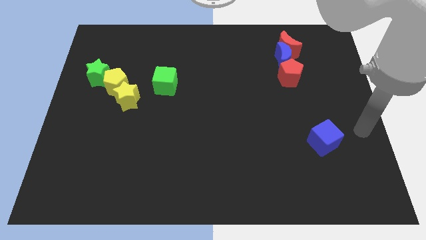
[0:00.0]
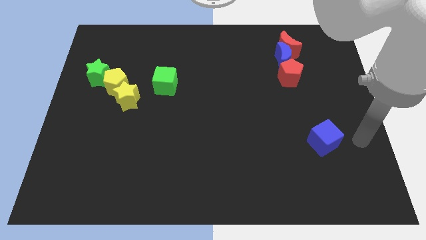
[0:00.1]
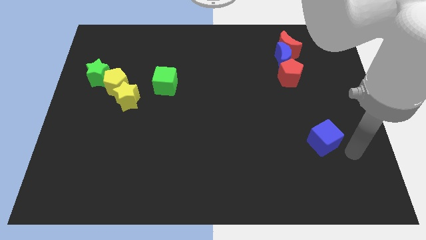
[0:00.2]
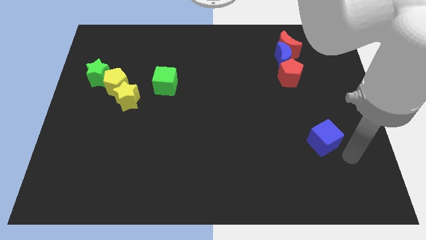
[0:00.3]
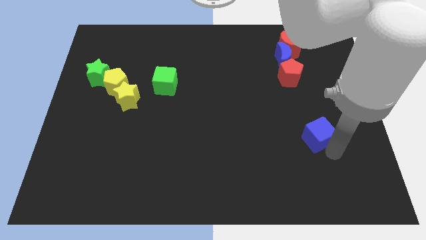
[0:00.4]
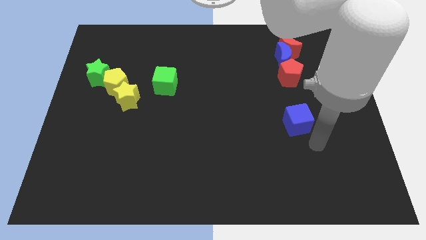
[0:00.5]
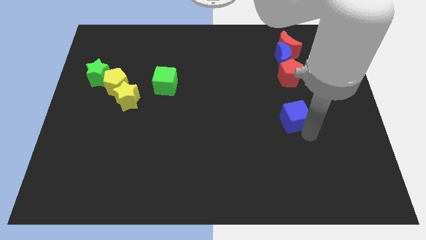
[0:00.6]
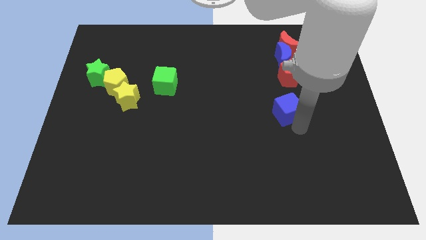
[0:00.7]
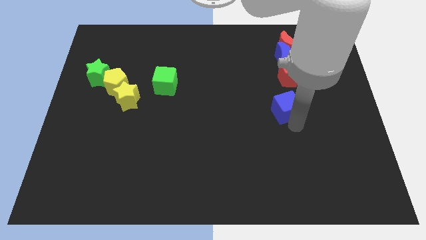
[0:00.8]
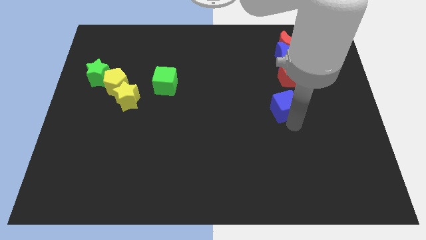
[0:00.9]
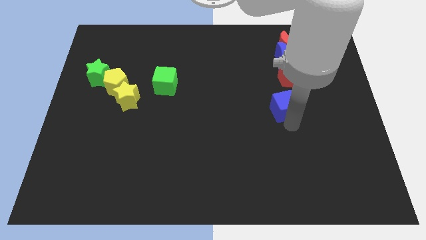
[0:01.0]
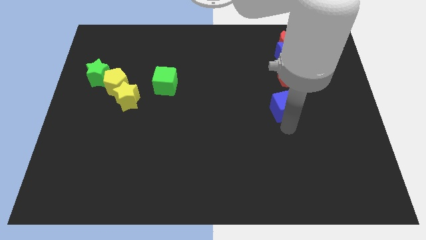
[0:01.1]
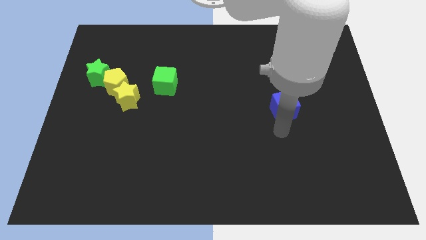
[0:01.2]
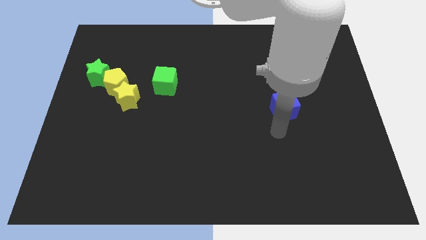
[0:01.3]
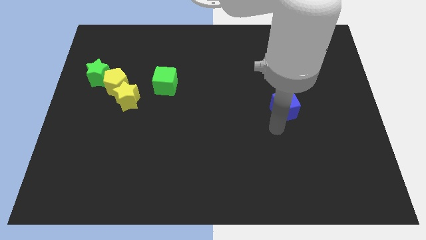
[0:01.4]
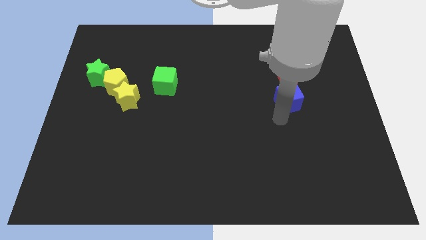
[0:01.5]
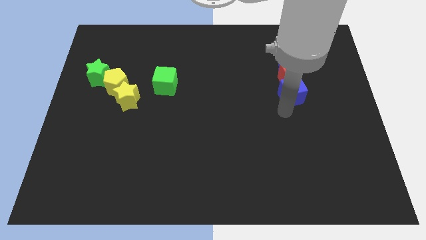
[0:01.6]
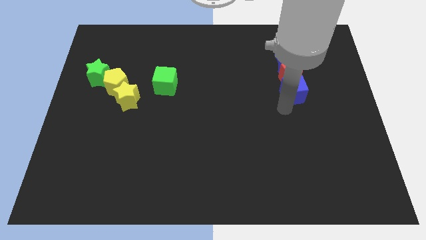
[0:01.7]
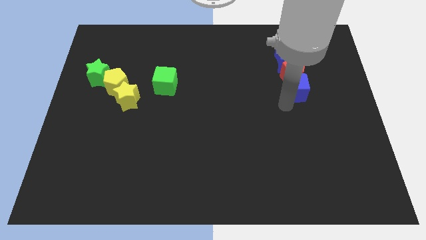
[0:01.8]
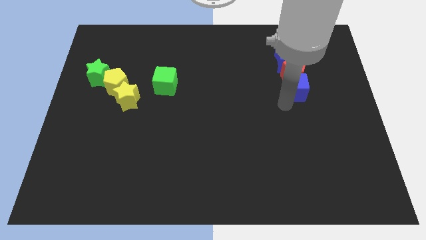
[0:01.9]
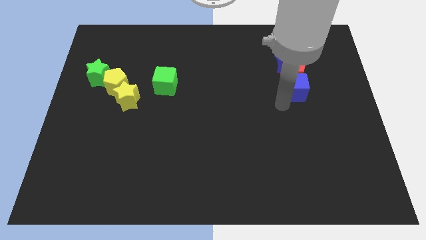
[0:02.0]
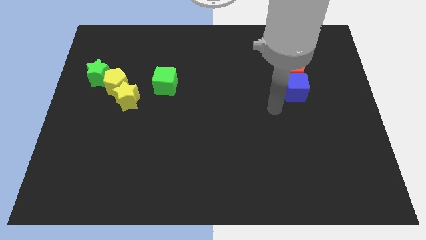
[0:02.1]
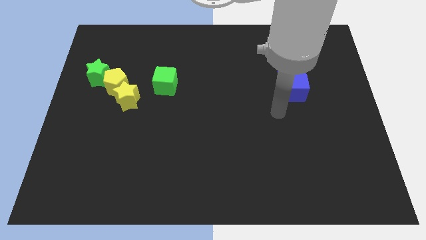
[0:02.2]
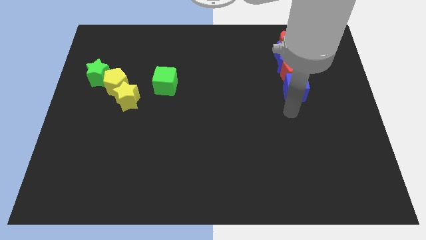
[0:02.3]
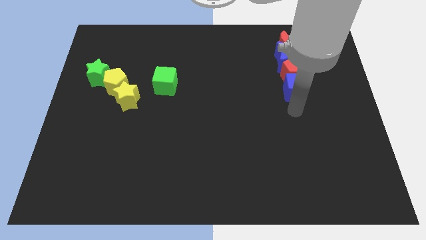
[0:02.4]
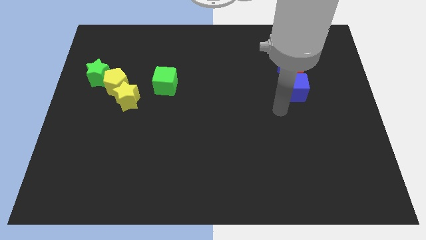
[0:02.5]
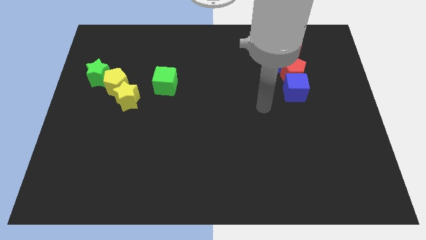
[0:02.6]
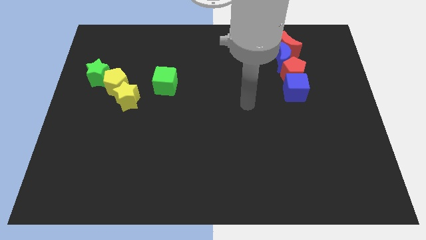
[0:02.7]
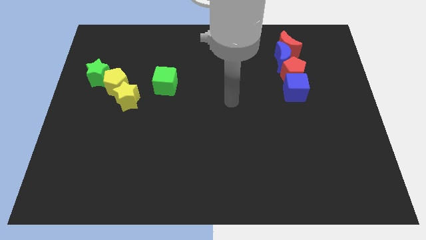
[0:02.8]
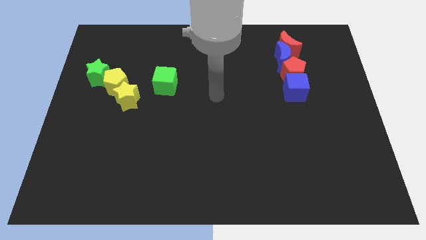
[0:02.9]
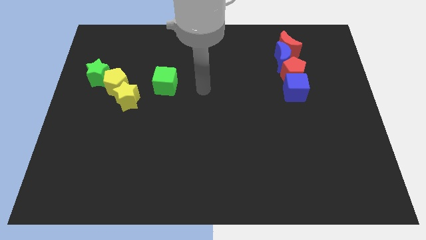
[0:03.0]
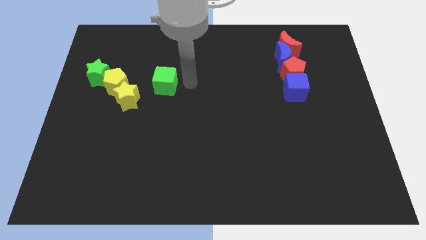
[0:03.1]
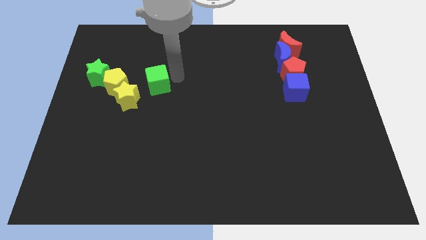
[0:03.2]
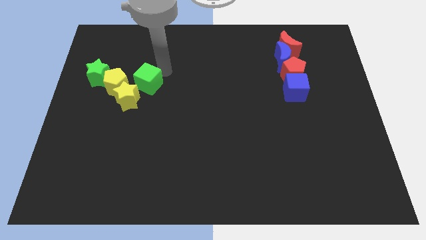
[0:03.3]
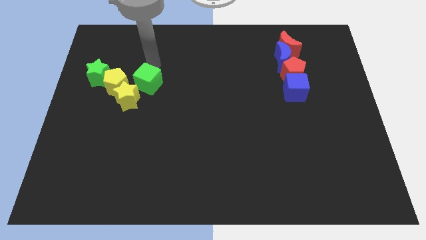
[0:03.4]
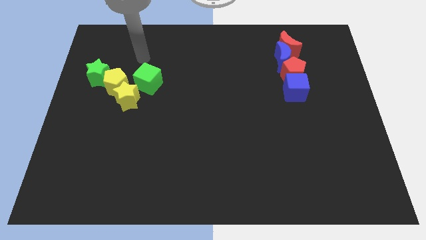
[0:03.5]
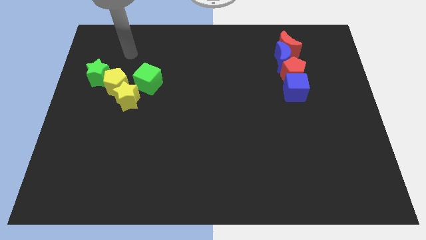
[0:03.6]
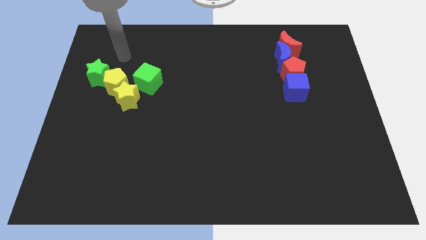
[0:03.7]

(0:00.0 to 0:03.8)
move the green cube above the yellow star

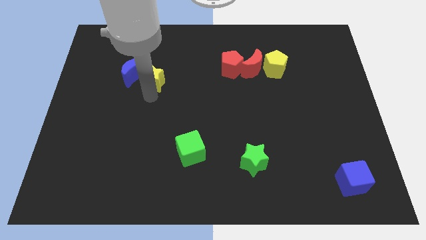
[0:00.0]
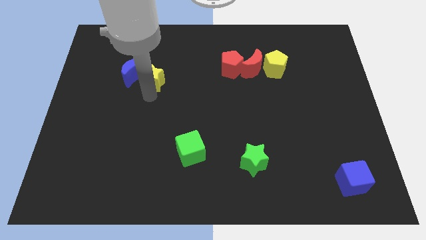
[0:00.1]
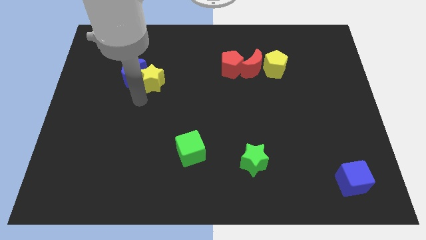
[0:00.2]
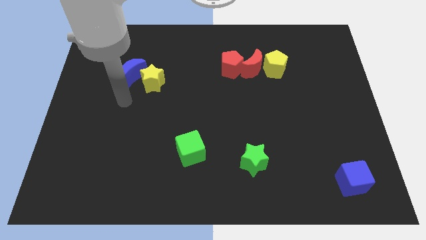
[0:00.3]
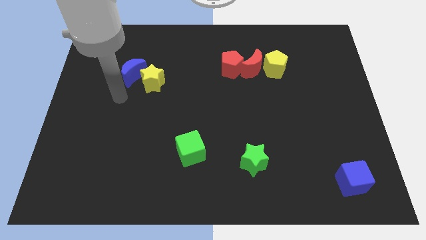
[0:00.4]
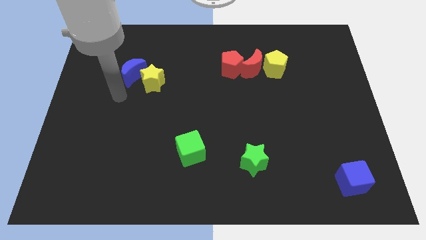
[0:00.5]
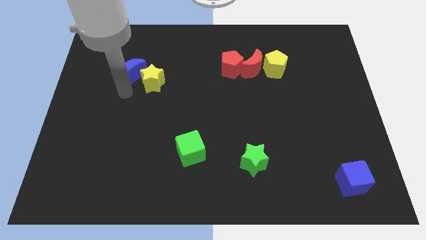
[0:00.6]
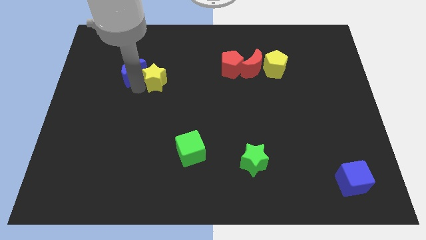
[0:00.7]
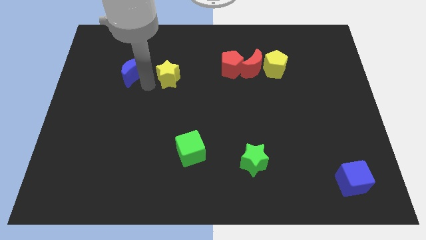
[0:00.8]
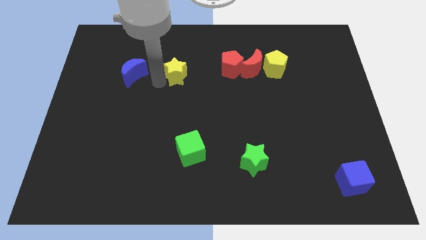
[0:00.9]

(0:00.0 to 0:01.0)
place your arm in between yellow star and blue moon

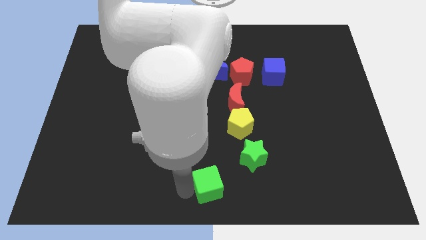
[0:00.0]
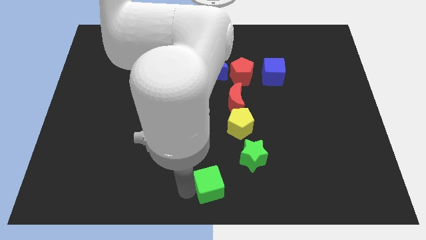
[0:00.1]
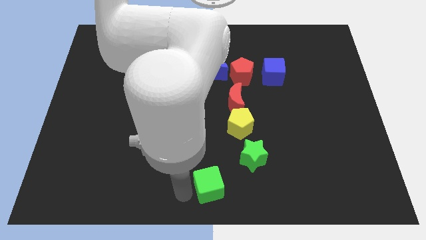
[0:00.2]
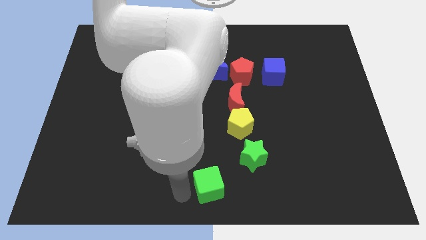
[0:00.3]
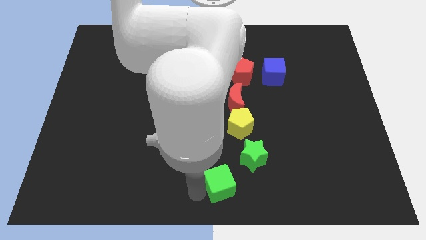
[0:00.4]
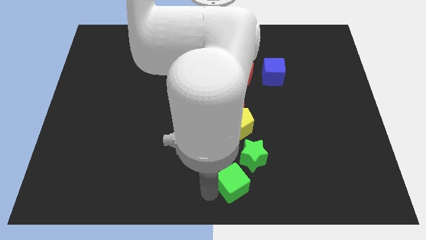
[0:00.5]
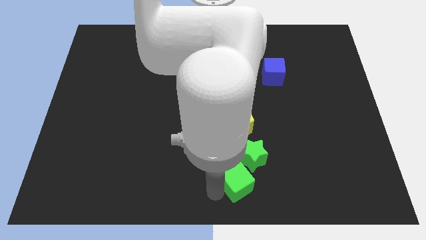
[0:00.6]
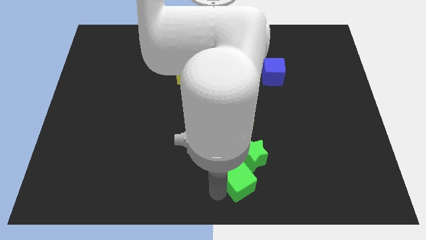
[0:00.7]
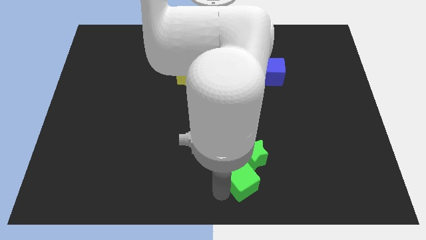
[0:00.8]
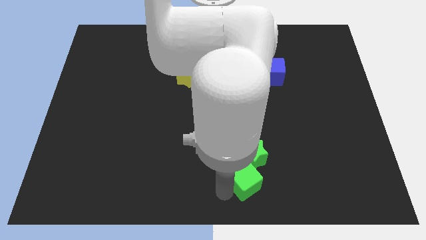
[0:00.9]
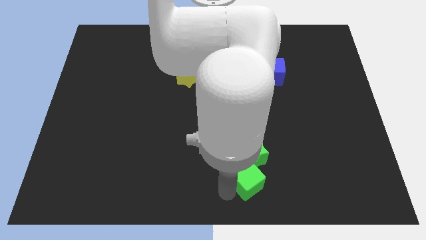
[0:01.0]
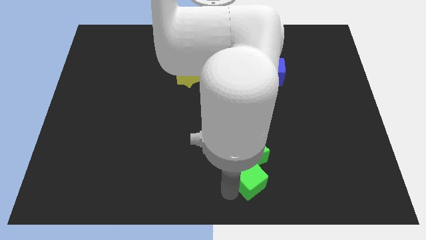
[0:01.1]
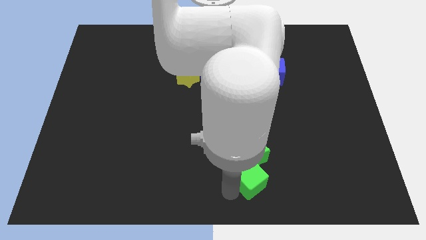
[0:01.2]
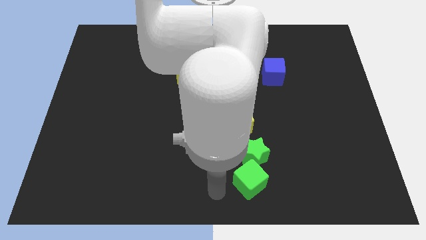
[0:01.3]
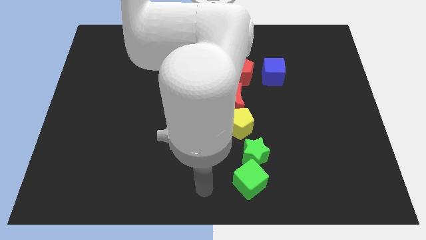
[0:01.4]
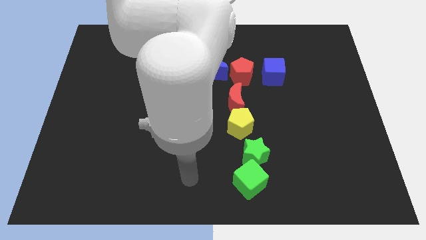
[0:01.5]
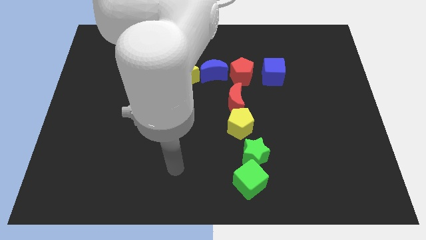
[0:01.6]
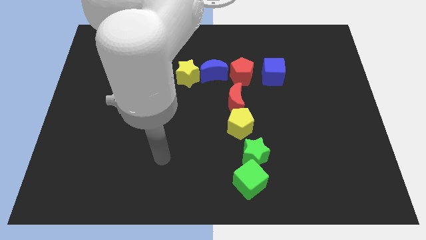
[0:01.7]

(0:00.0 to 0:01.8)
move the green cube into the green star

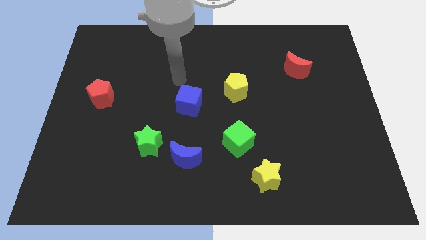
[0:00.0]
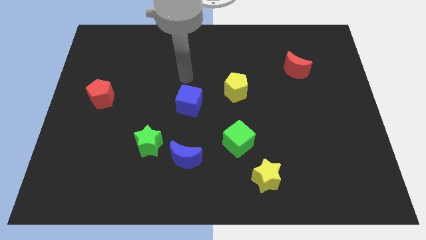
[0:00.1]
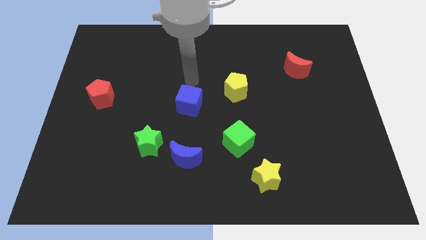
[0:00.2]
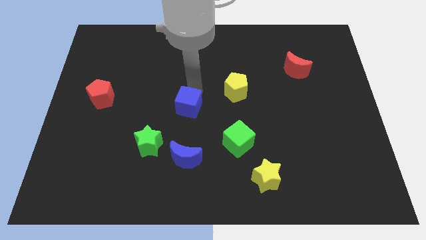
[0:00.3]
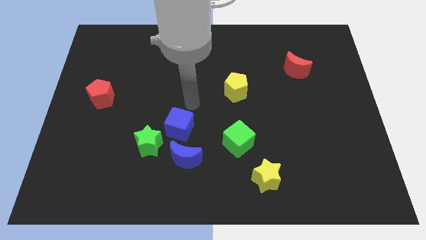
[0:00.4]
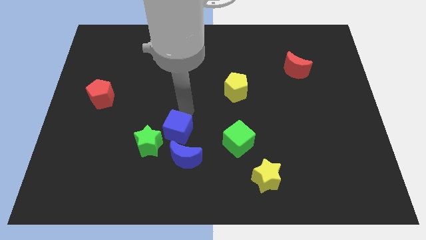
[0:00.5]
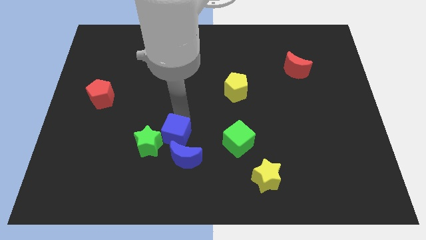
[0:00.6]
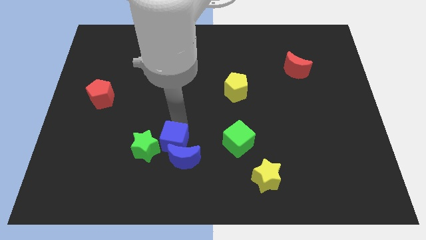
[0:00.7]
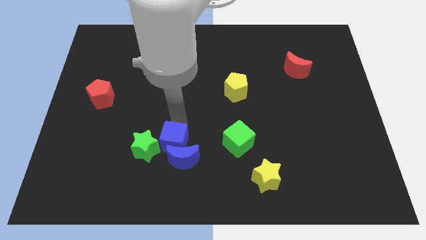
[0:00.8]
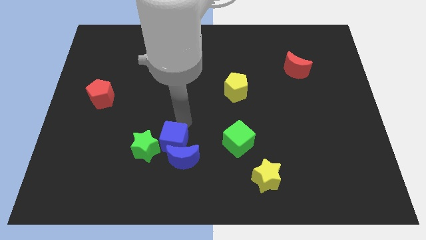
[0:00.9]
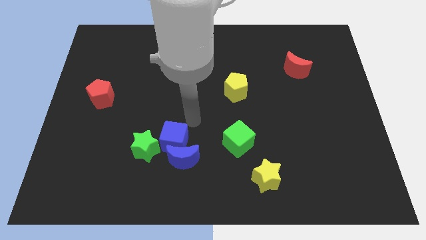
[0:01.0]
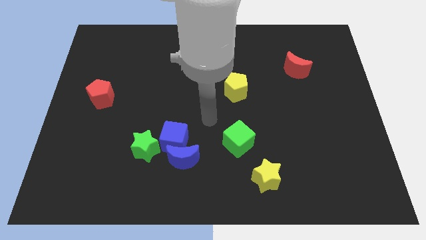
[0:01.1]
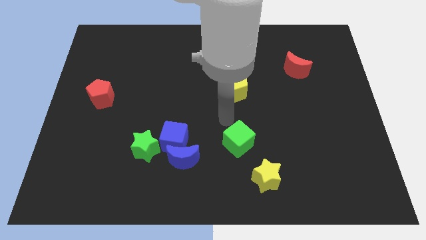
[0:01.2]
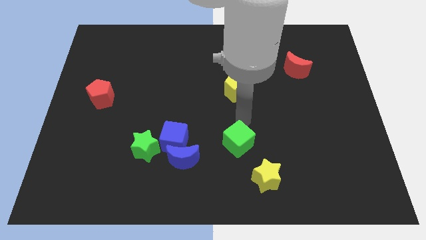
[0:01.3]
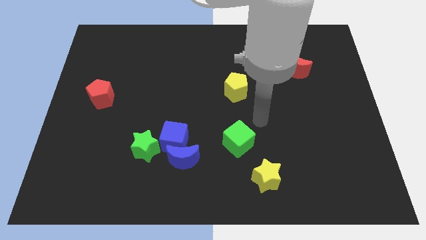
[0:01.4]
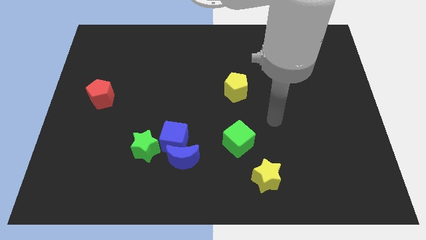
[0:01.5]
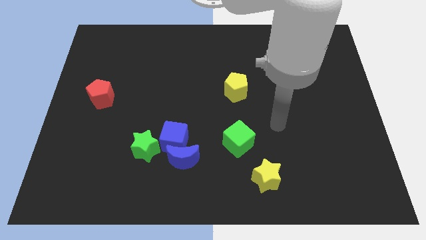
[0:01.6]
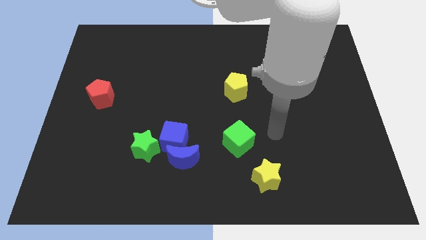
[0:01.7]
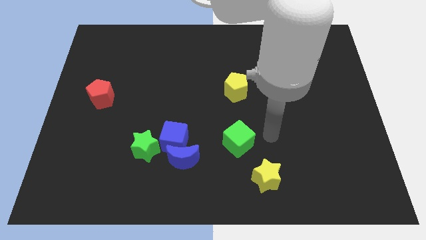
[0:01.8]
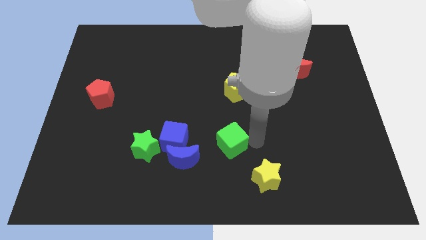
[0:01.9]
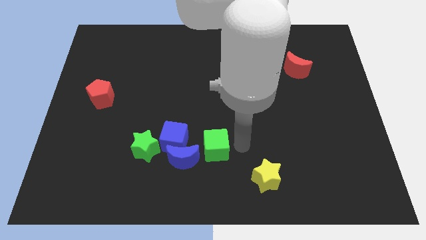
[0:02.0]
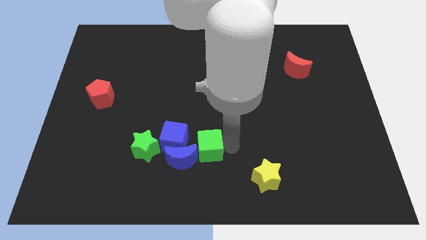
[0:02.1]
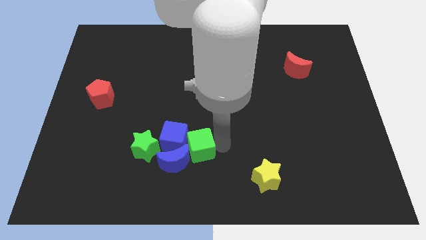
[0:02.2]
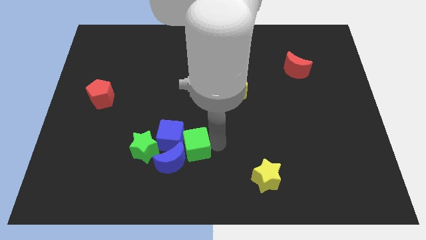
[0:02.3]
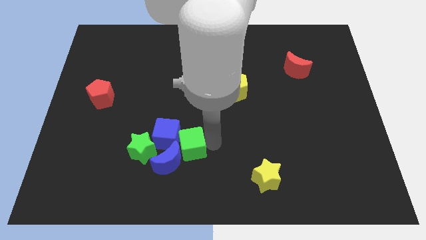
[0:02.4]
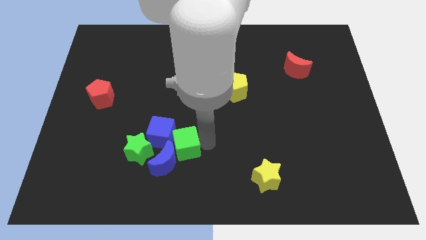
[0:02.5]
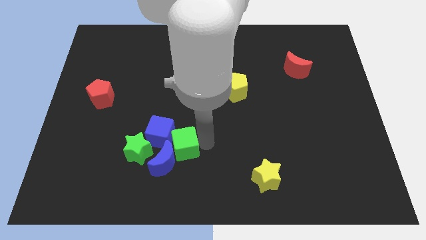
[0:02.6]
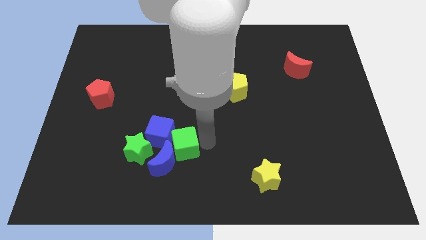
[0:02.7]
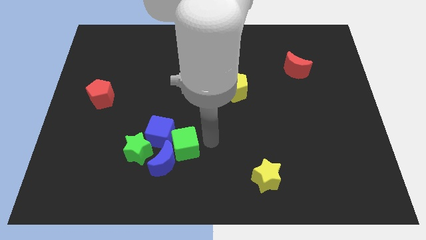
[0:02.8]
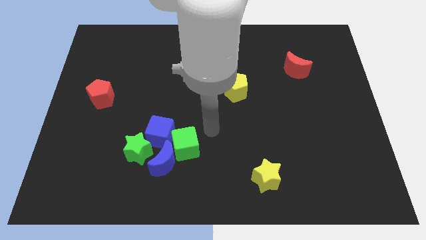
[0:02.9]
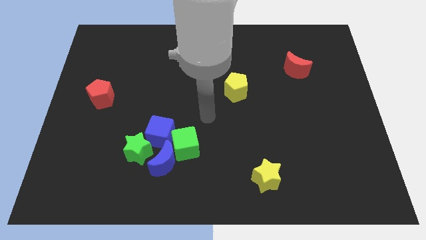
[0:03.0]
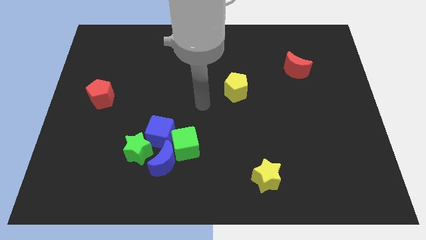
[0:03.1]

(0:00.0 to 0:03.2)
move the blue cube green cube towards the blue crescent
